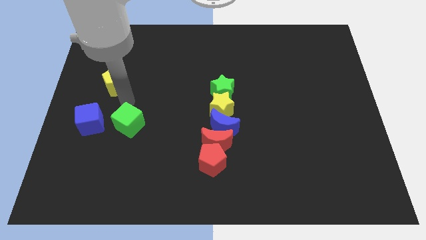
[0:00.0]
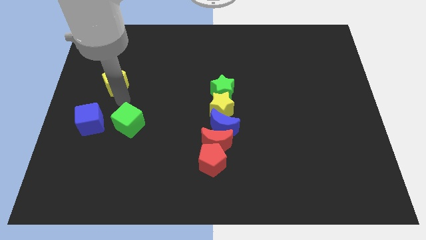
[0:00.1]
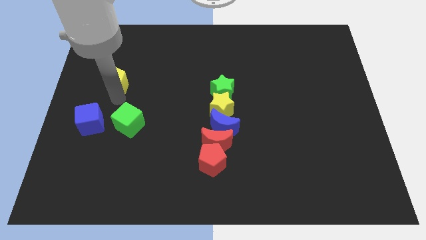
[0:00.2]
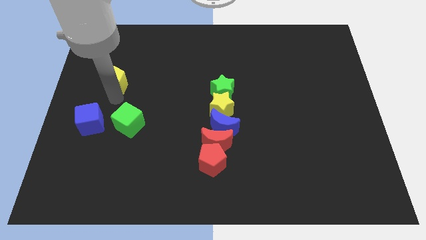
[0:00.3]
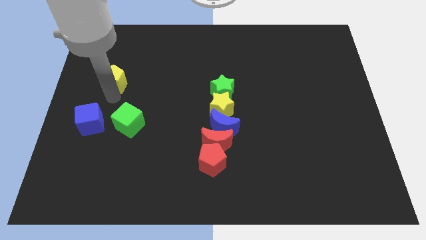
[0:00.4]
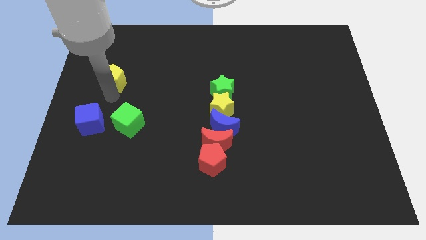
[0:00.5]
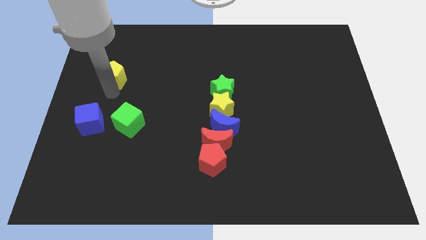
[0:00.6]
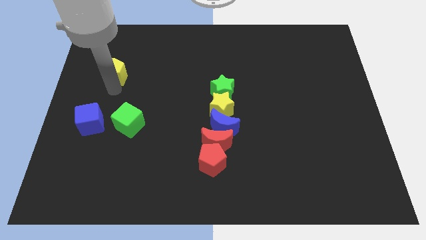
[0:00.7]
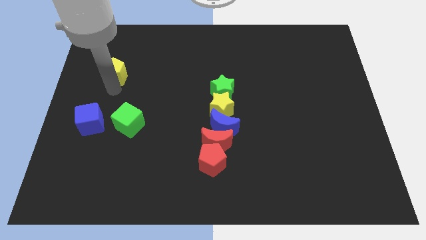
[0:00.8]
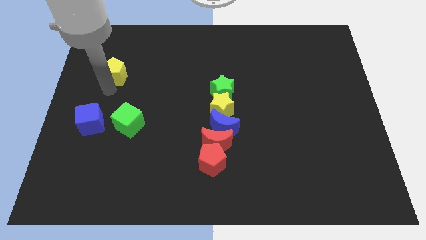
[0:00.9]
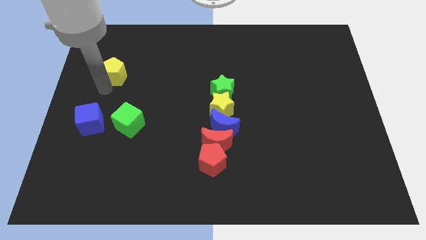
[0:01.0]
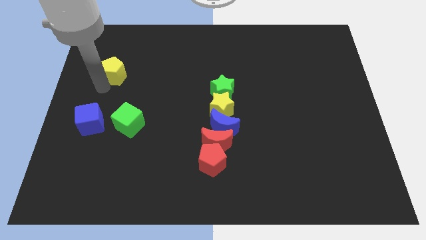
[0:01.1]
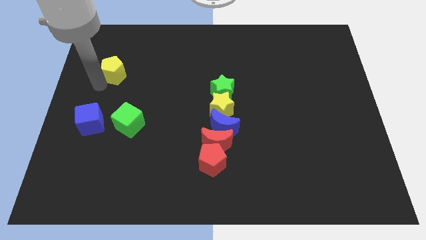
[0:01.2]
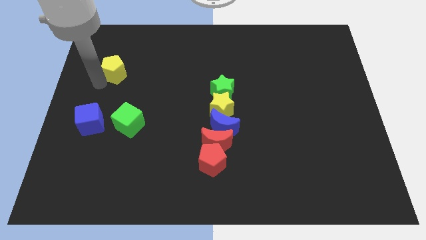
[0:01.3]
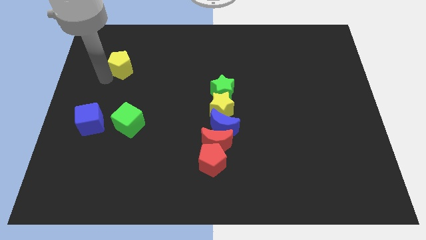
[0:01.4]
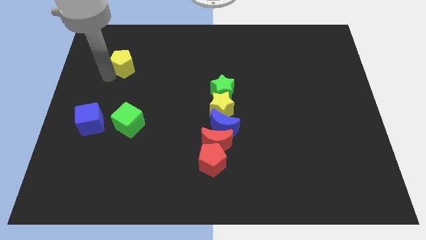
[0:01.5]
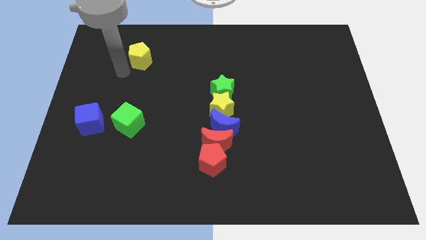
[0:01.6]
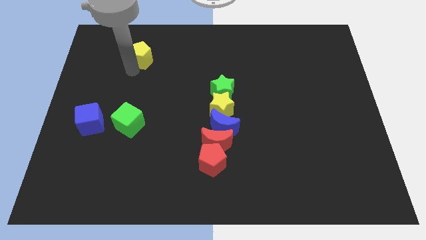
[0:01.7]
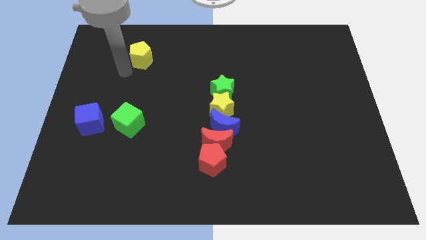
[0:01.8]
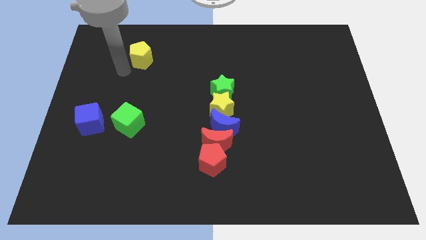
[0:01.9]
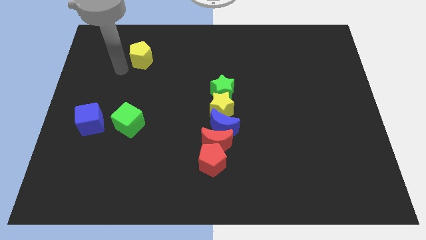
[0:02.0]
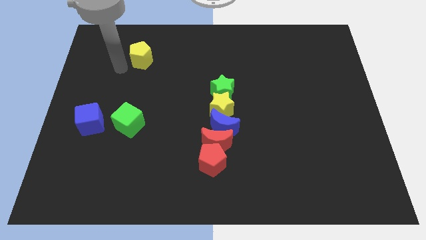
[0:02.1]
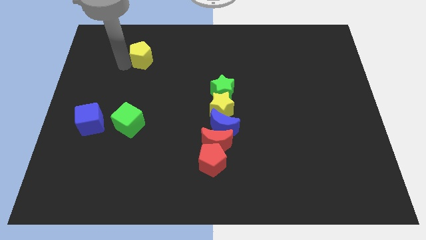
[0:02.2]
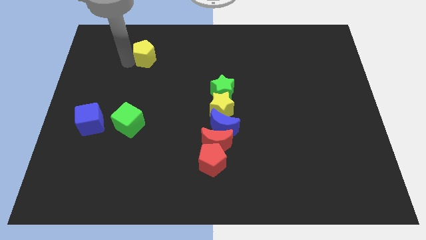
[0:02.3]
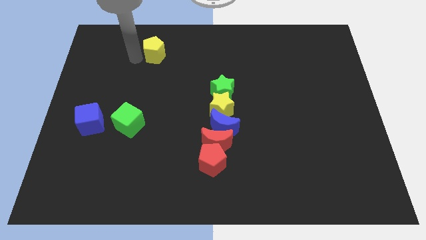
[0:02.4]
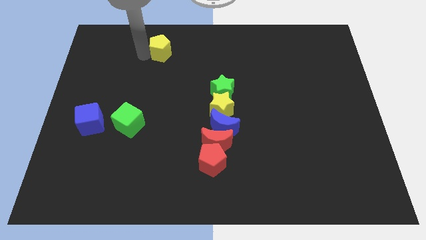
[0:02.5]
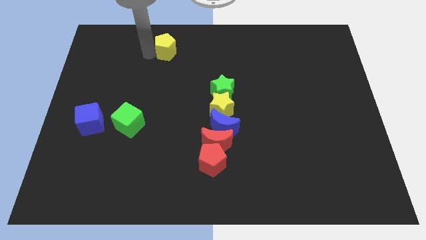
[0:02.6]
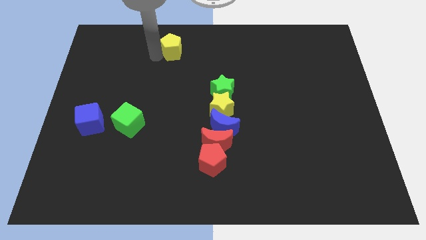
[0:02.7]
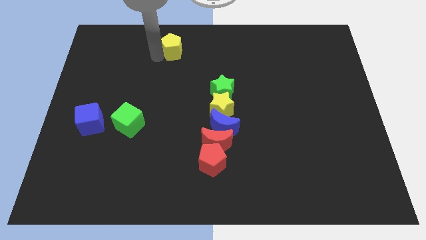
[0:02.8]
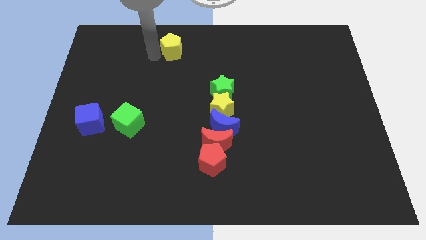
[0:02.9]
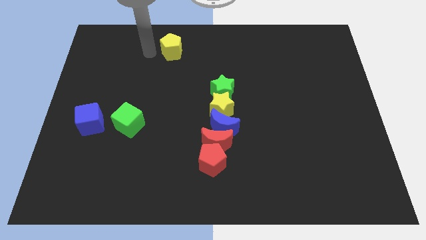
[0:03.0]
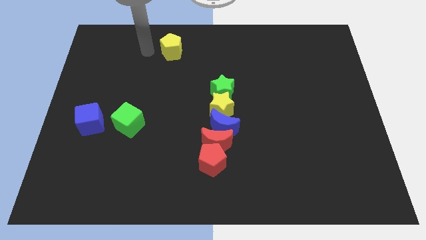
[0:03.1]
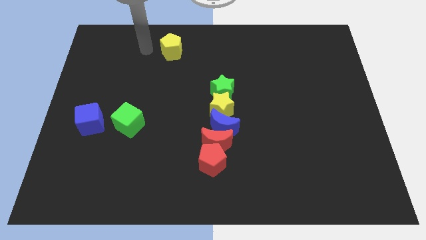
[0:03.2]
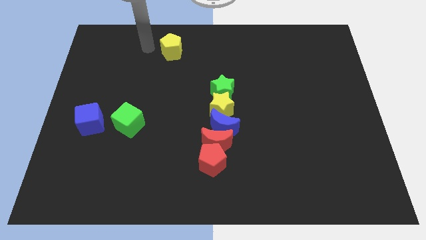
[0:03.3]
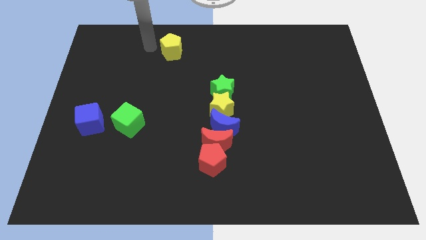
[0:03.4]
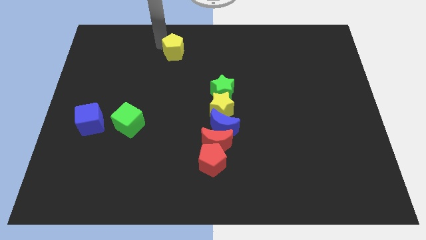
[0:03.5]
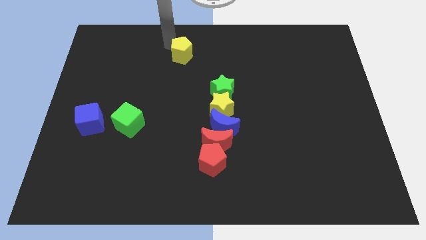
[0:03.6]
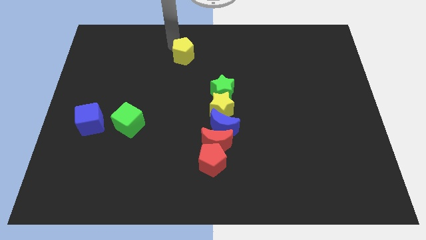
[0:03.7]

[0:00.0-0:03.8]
move the yellow pentagon towards top side of the board

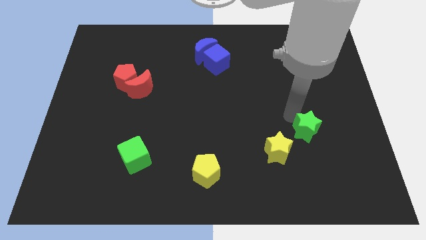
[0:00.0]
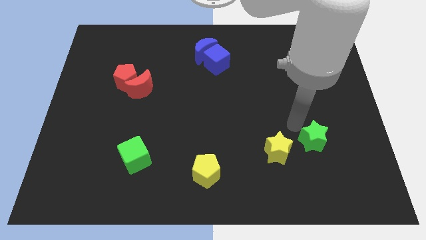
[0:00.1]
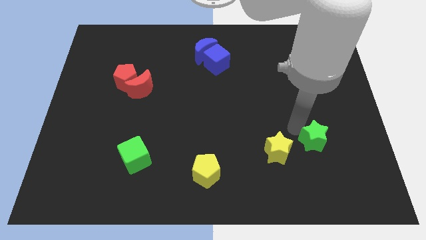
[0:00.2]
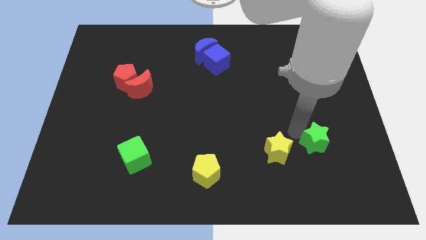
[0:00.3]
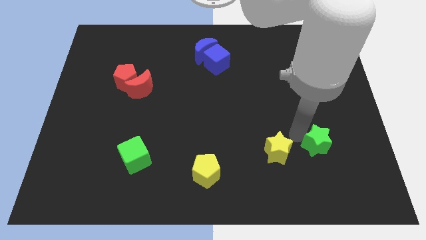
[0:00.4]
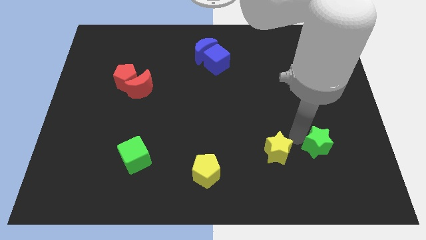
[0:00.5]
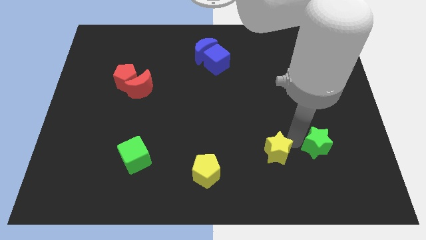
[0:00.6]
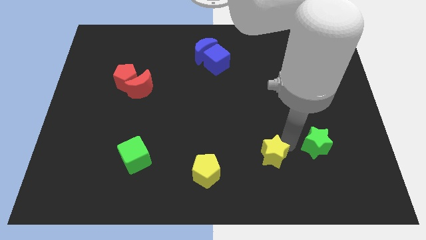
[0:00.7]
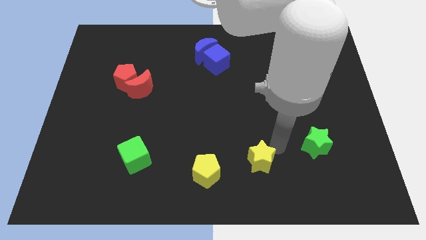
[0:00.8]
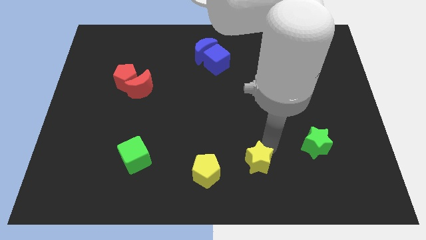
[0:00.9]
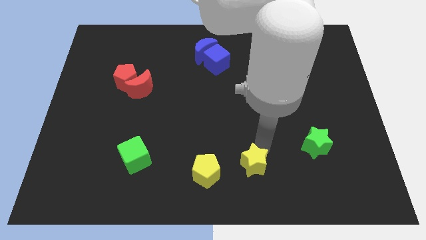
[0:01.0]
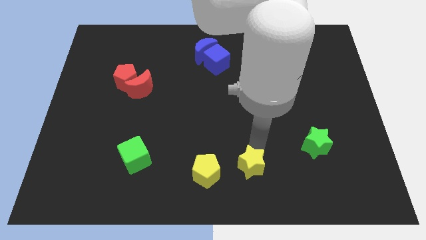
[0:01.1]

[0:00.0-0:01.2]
place the yellow star to the right side of the yellow pentagon

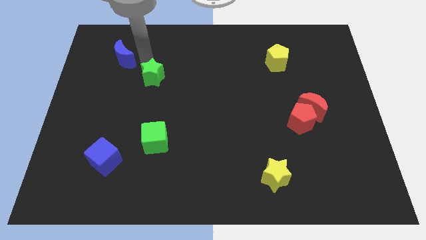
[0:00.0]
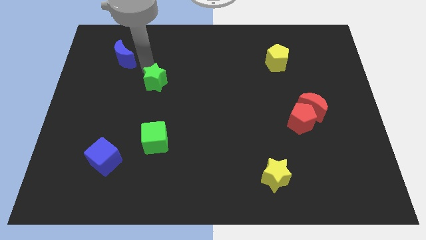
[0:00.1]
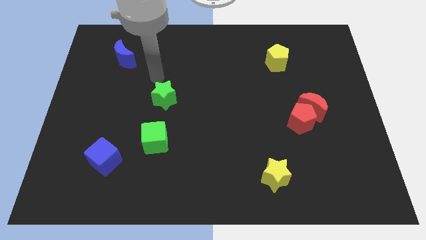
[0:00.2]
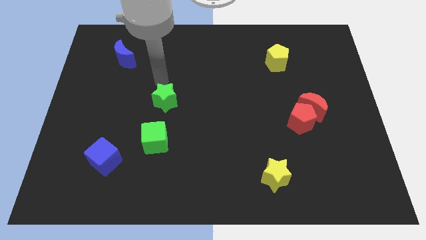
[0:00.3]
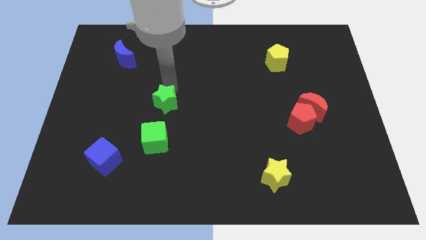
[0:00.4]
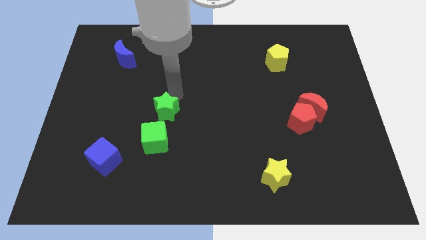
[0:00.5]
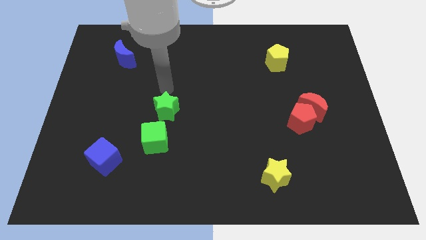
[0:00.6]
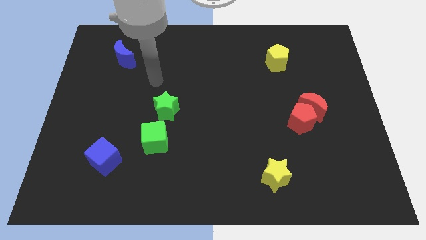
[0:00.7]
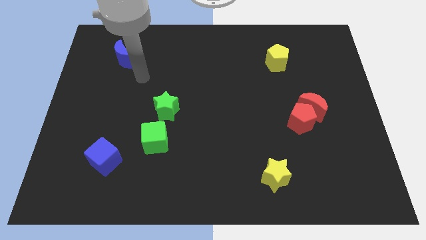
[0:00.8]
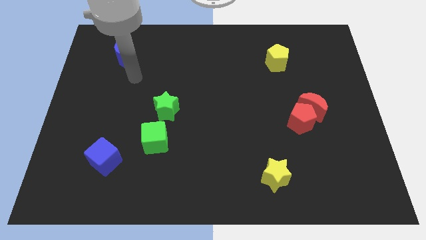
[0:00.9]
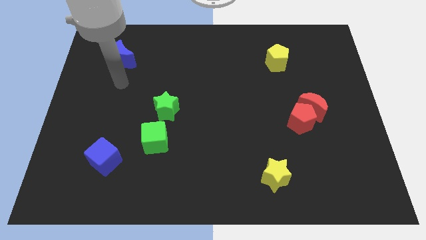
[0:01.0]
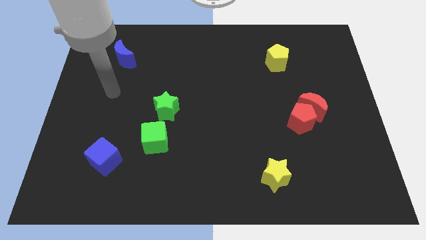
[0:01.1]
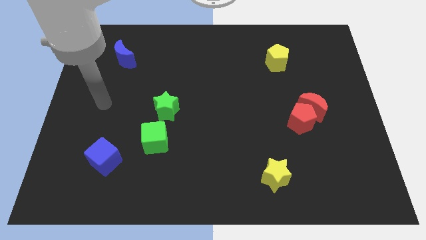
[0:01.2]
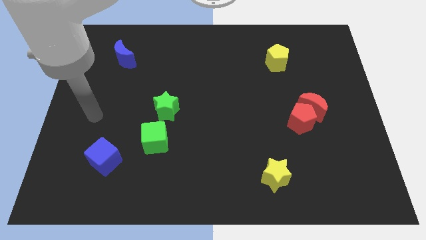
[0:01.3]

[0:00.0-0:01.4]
push the green star to the top right side of the green cube

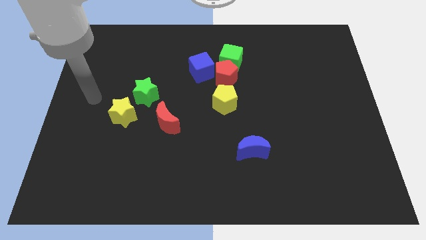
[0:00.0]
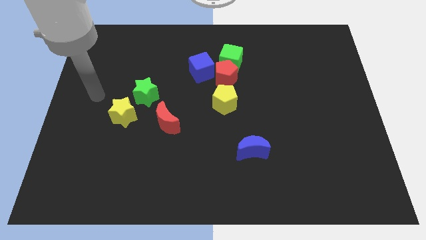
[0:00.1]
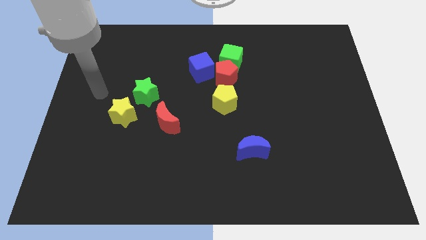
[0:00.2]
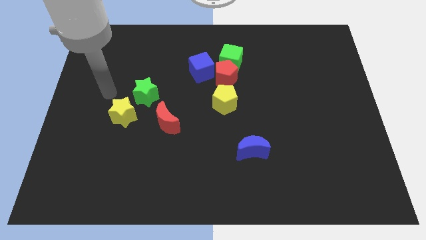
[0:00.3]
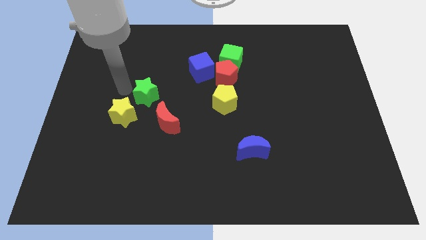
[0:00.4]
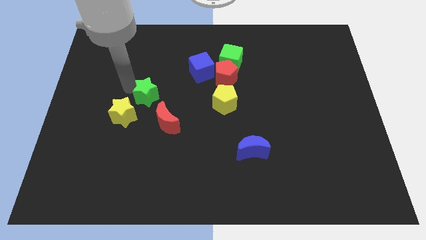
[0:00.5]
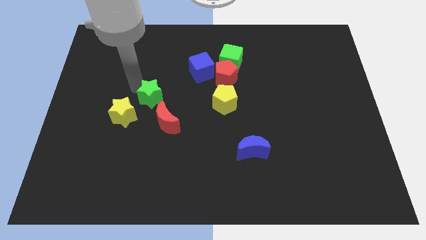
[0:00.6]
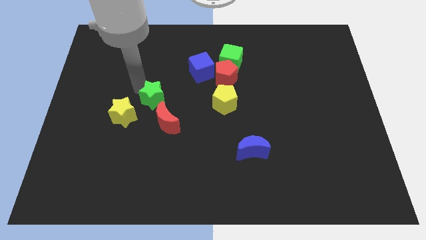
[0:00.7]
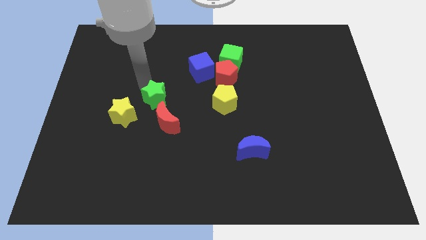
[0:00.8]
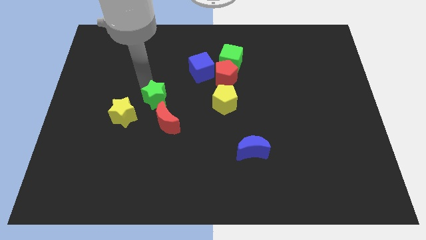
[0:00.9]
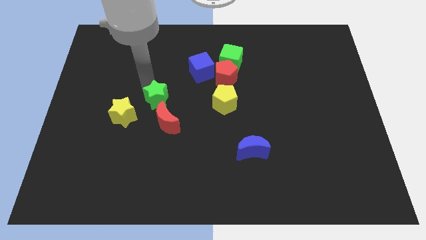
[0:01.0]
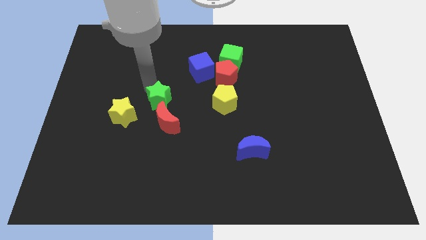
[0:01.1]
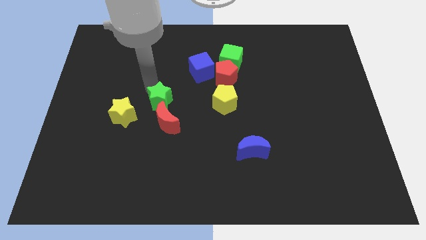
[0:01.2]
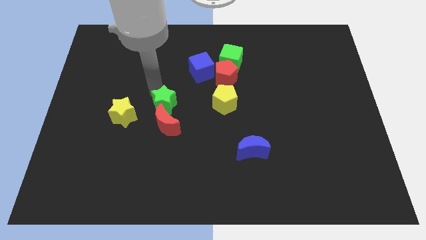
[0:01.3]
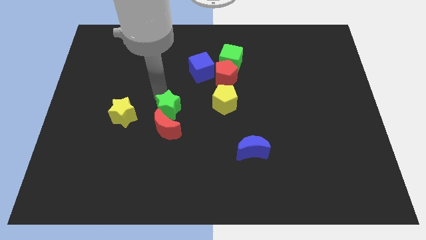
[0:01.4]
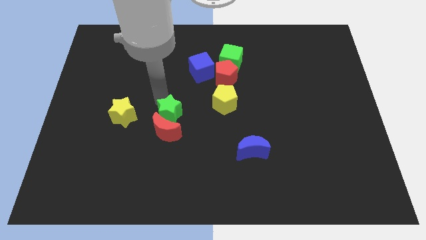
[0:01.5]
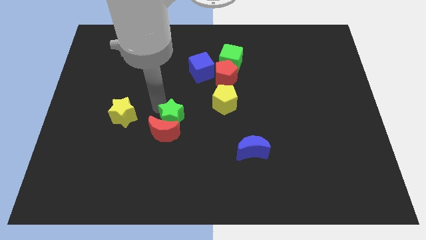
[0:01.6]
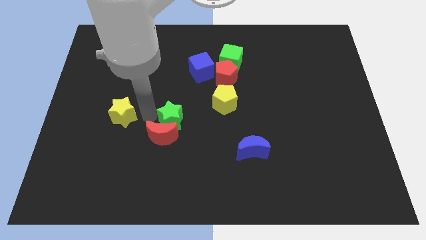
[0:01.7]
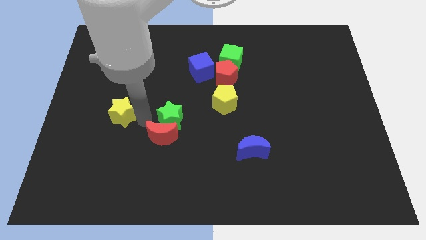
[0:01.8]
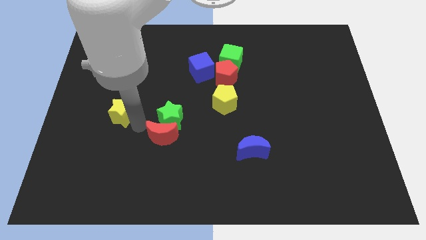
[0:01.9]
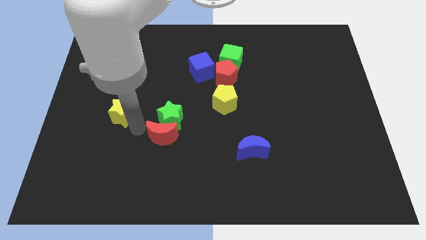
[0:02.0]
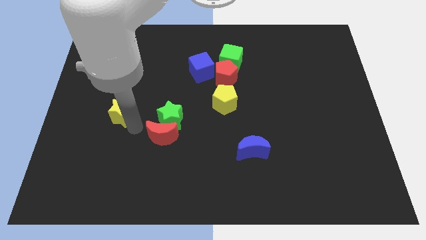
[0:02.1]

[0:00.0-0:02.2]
touch red crescent with green star

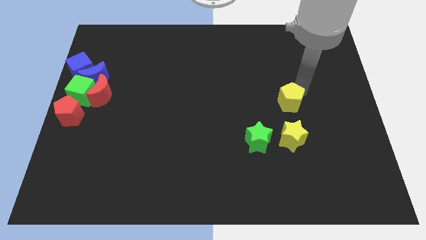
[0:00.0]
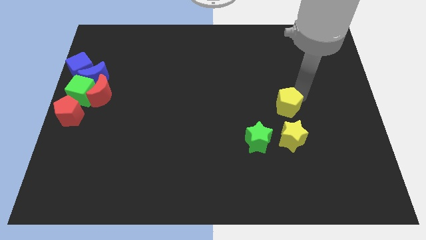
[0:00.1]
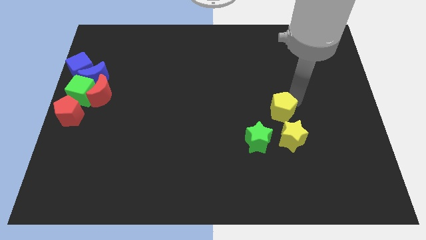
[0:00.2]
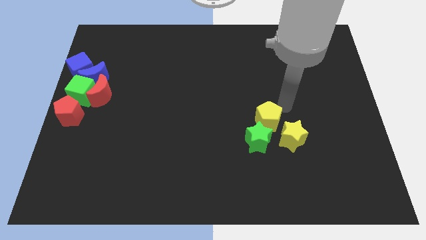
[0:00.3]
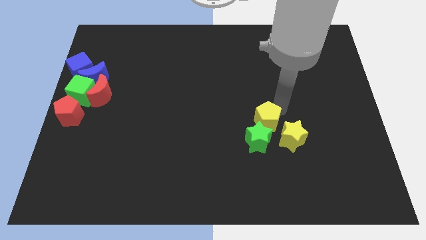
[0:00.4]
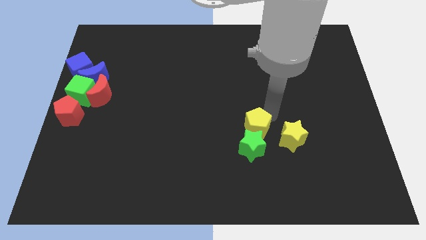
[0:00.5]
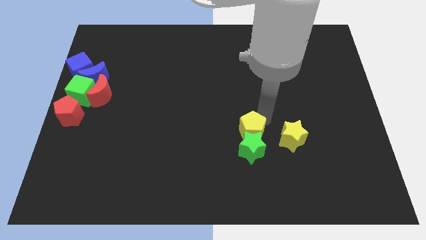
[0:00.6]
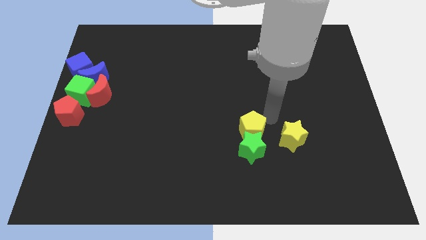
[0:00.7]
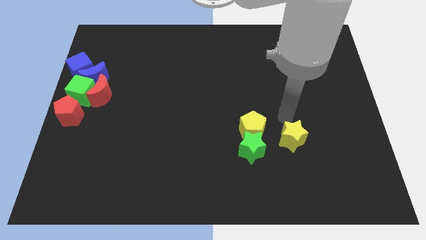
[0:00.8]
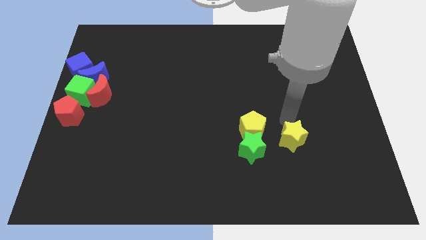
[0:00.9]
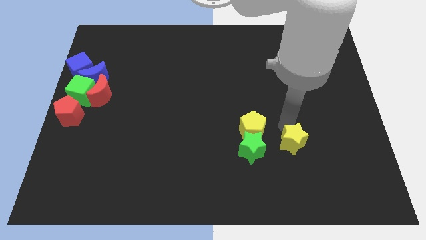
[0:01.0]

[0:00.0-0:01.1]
push the yellow pentagon into the green star
